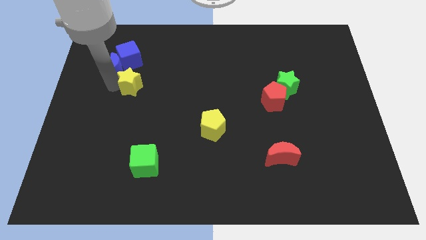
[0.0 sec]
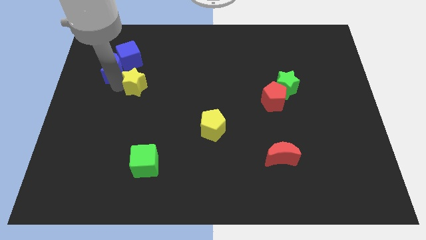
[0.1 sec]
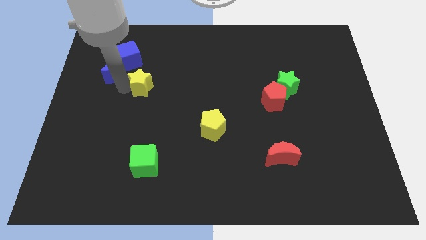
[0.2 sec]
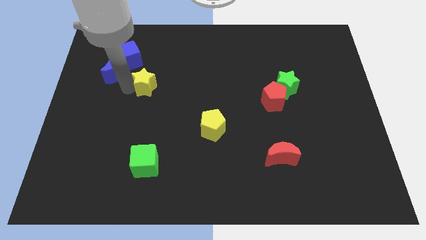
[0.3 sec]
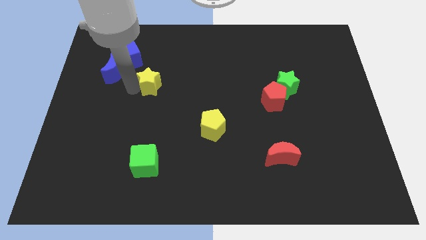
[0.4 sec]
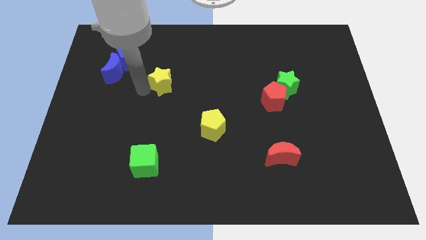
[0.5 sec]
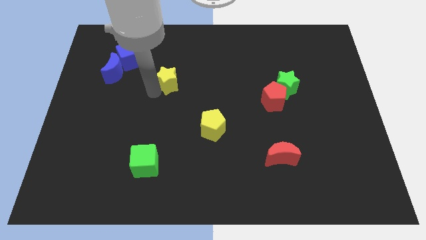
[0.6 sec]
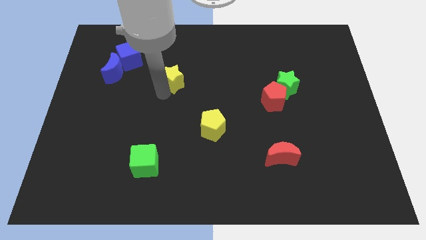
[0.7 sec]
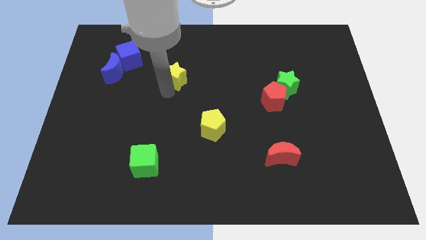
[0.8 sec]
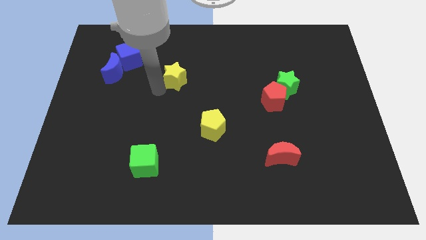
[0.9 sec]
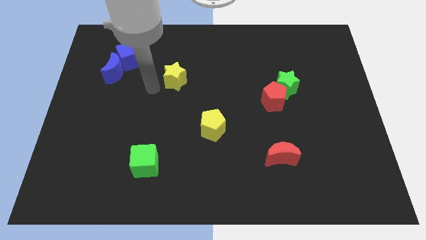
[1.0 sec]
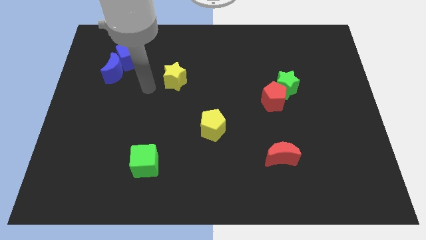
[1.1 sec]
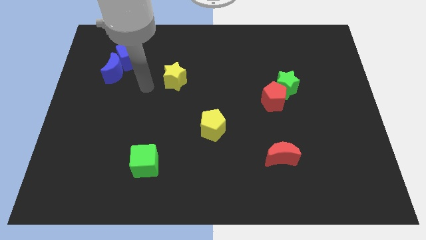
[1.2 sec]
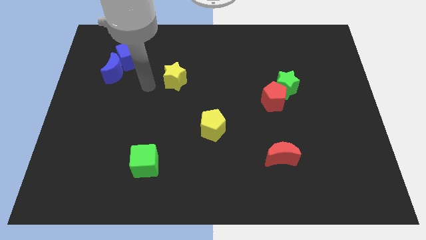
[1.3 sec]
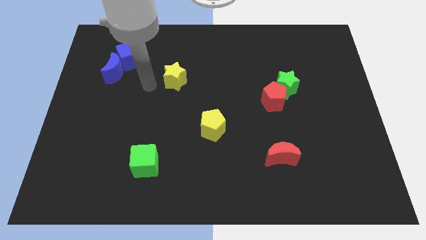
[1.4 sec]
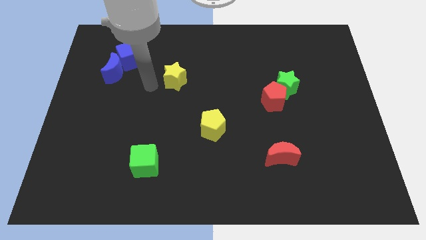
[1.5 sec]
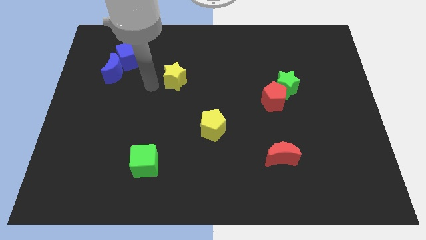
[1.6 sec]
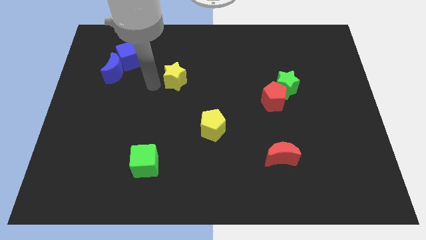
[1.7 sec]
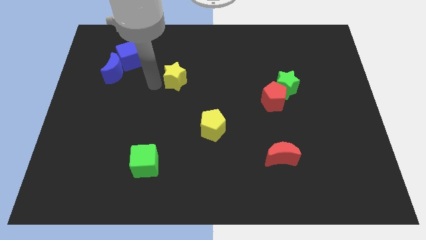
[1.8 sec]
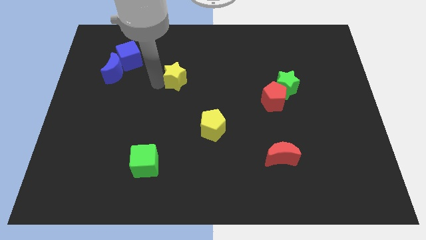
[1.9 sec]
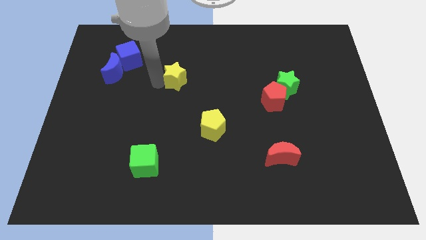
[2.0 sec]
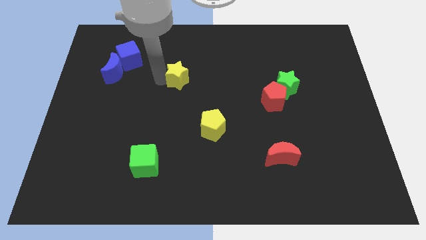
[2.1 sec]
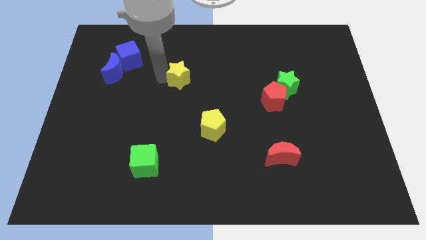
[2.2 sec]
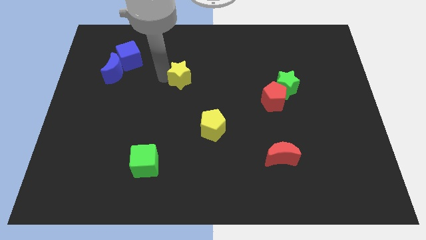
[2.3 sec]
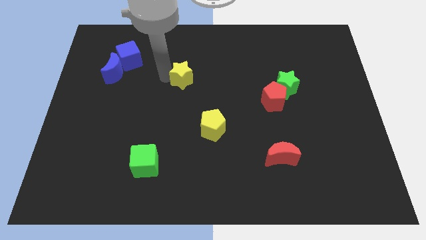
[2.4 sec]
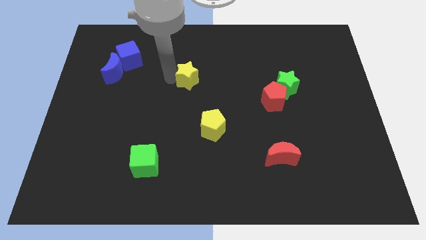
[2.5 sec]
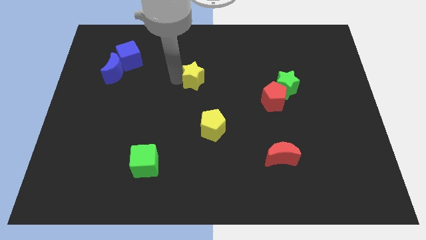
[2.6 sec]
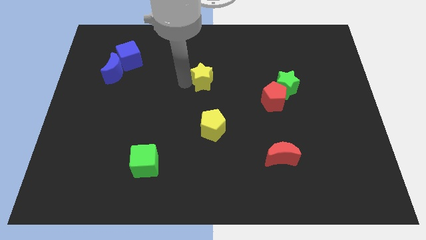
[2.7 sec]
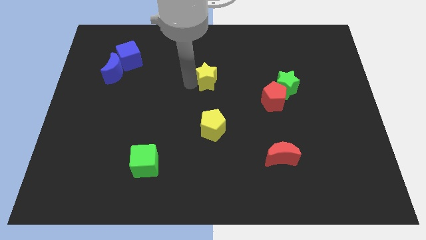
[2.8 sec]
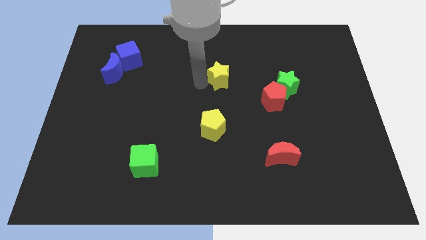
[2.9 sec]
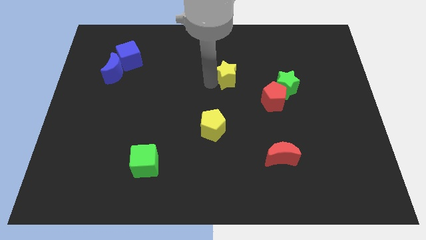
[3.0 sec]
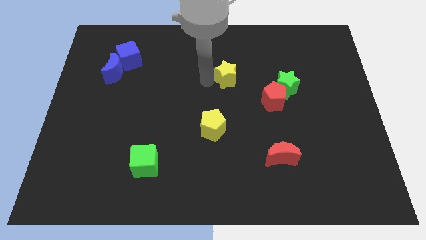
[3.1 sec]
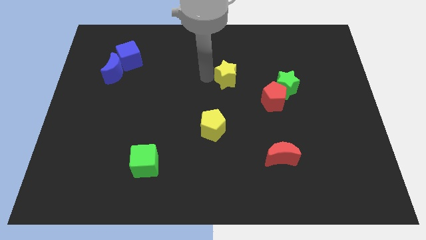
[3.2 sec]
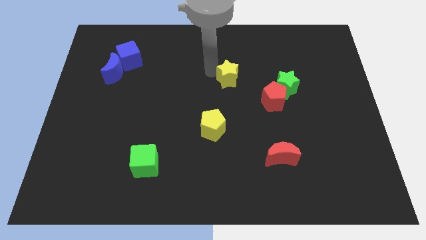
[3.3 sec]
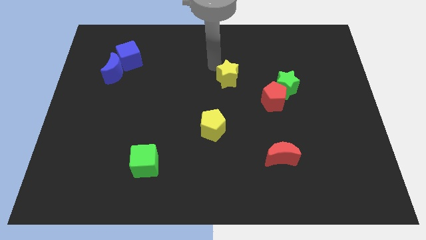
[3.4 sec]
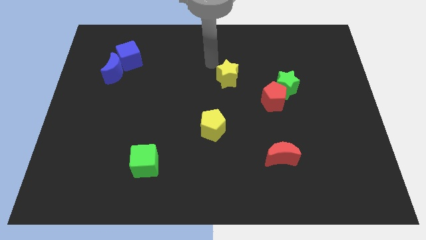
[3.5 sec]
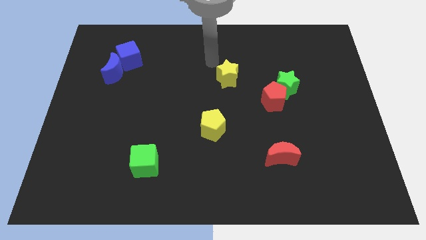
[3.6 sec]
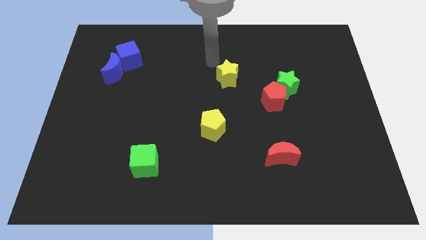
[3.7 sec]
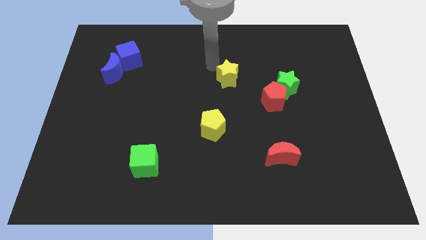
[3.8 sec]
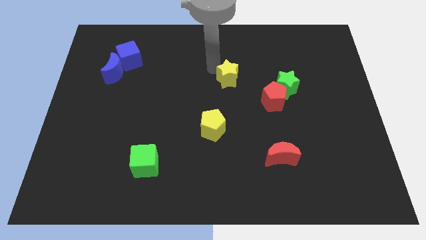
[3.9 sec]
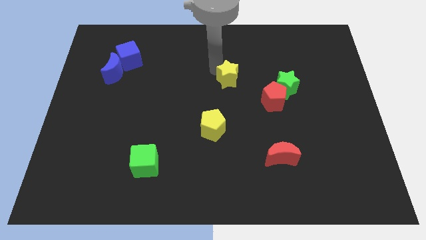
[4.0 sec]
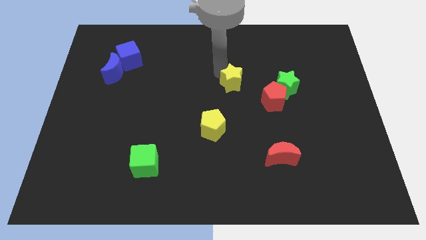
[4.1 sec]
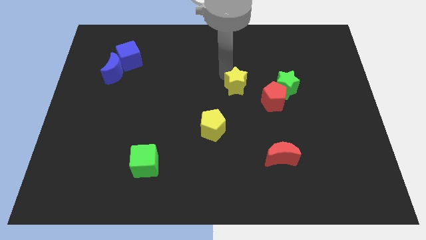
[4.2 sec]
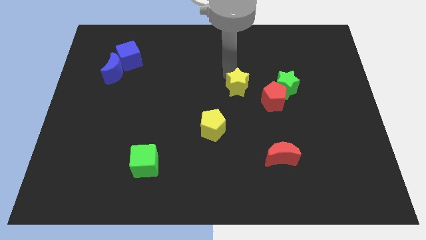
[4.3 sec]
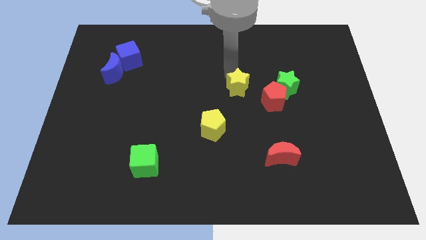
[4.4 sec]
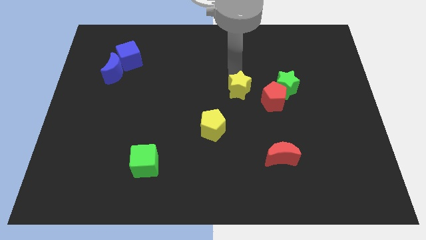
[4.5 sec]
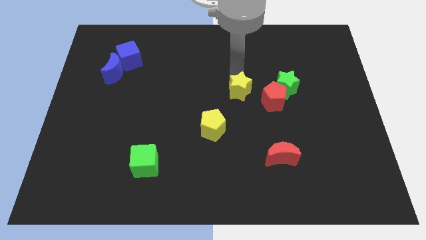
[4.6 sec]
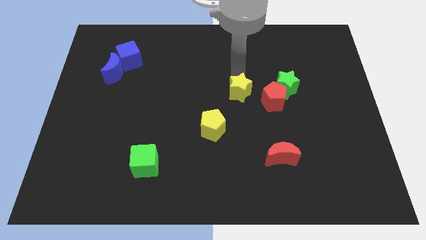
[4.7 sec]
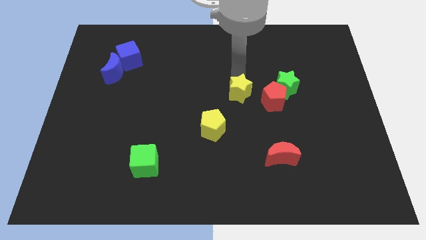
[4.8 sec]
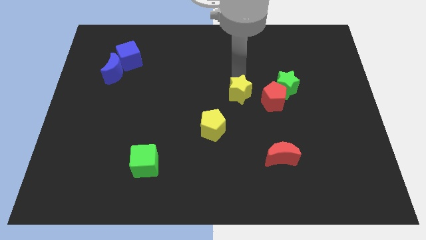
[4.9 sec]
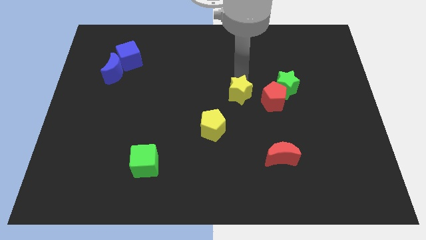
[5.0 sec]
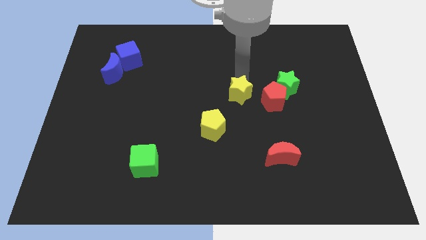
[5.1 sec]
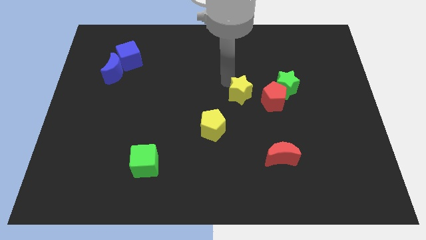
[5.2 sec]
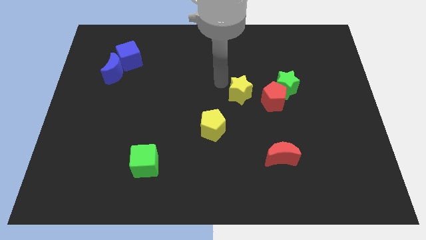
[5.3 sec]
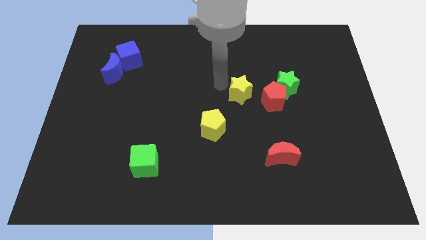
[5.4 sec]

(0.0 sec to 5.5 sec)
move yellow star to the left of the yellow pentagon

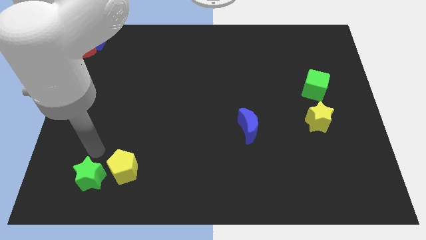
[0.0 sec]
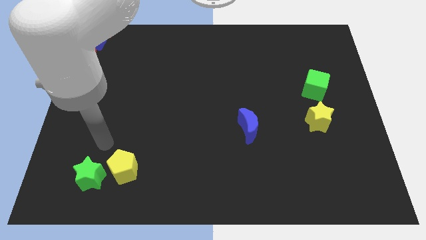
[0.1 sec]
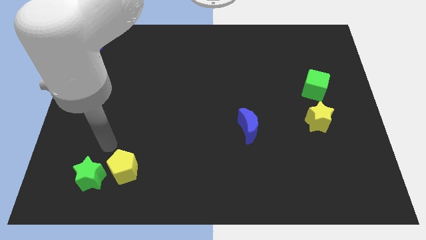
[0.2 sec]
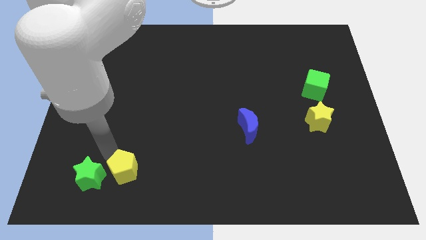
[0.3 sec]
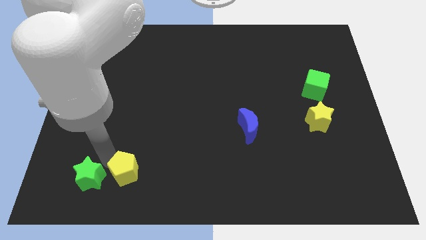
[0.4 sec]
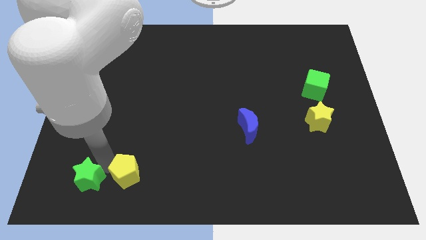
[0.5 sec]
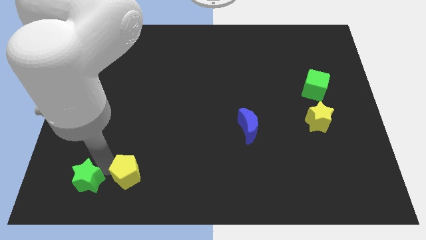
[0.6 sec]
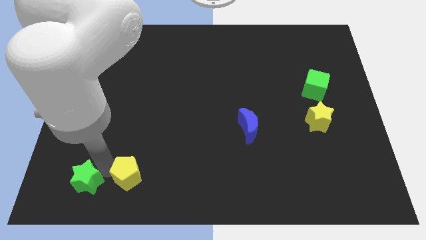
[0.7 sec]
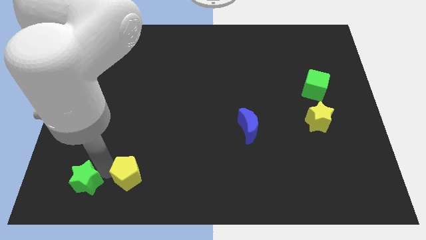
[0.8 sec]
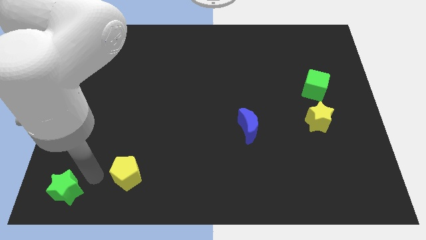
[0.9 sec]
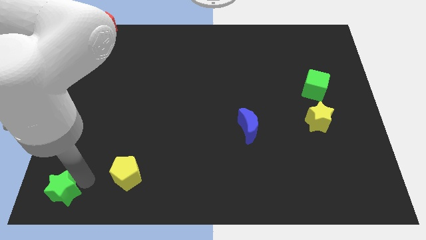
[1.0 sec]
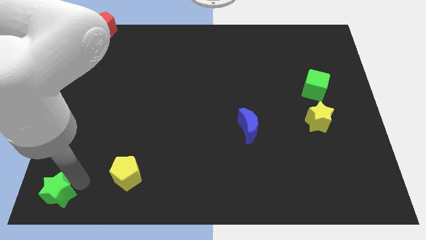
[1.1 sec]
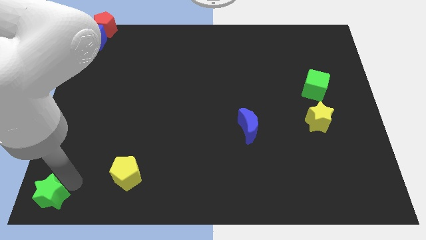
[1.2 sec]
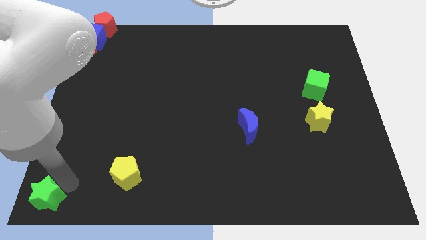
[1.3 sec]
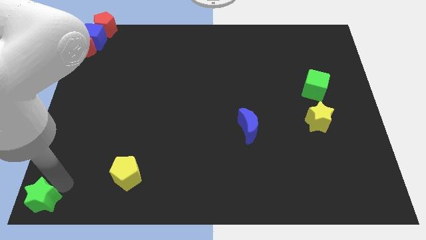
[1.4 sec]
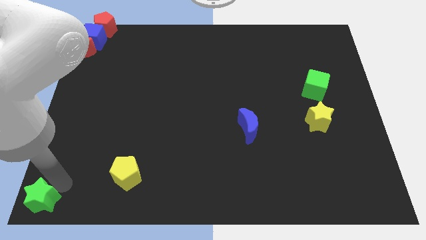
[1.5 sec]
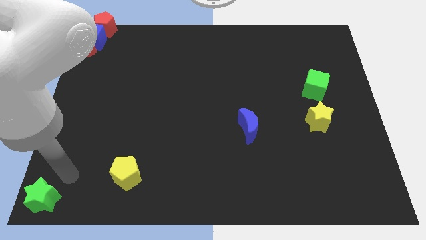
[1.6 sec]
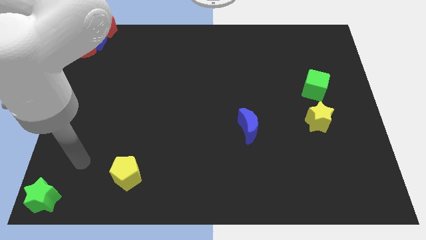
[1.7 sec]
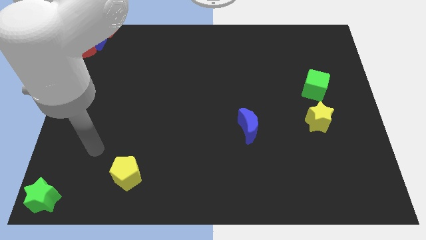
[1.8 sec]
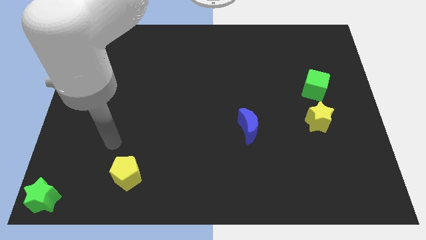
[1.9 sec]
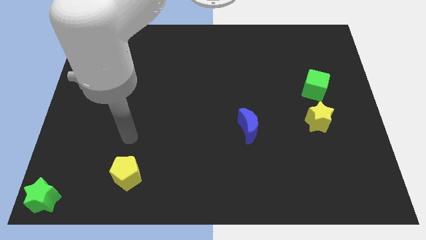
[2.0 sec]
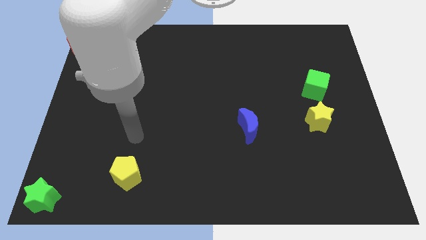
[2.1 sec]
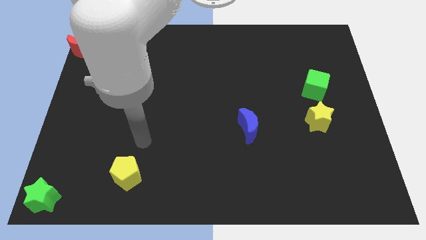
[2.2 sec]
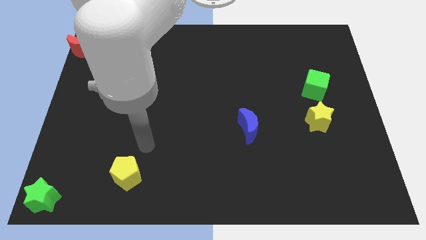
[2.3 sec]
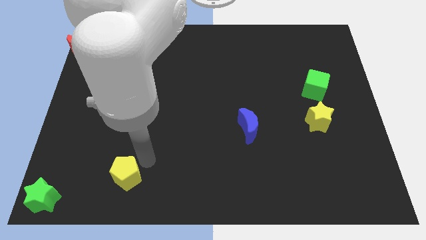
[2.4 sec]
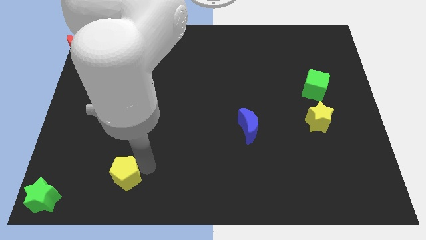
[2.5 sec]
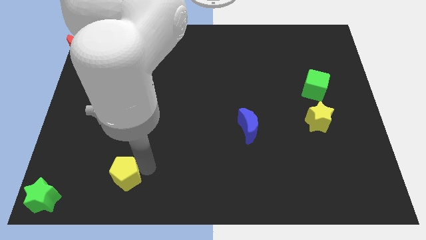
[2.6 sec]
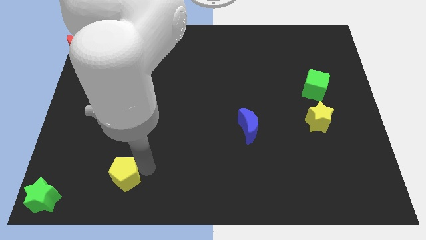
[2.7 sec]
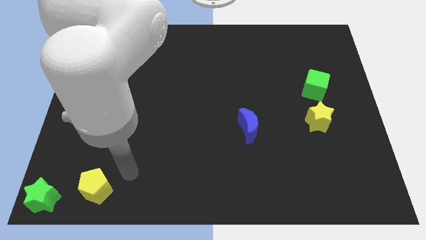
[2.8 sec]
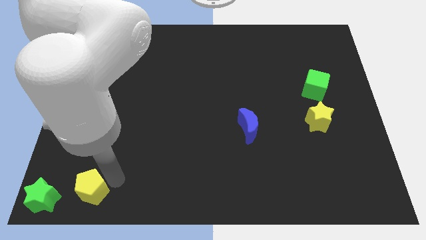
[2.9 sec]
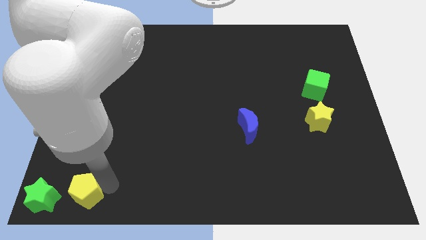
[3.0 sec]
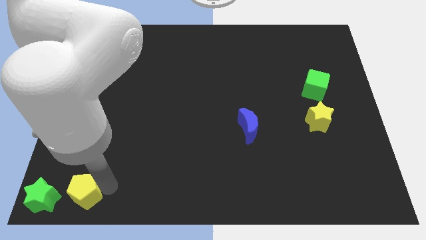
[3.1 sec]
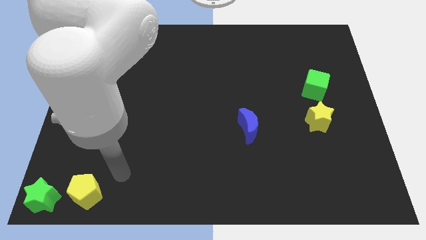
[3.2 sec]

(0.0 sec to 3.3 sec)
place the green star and yellow pentagon at the bottom left side of the board

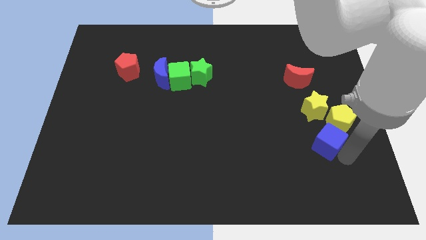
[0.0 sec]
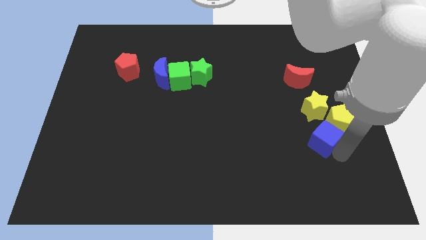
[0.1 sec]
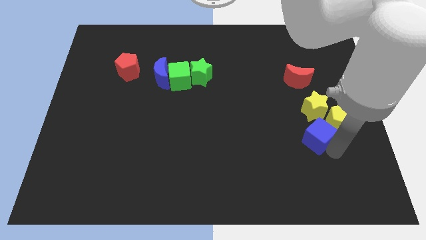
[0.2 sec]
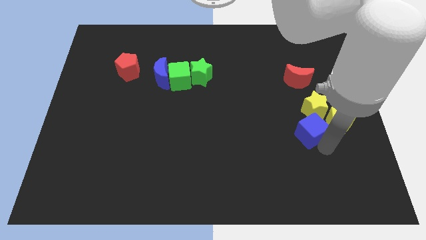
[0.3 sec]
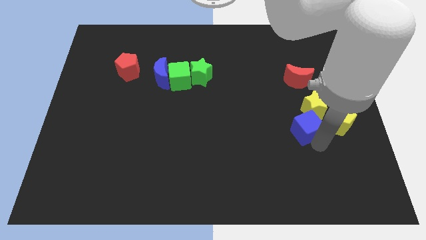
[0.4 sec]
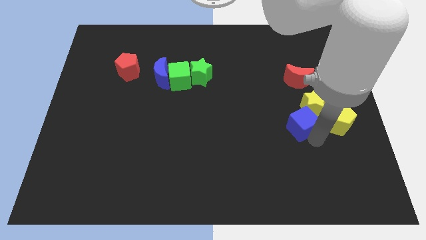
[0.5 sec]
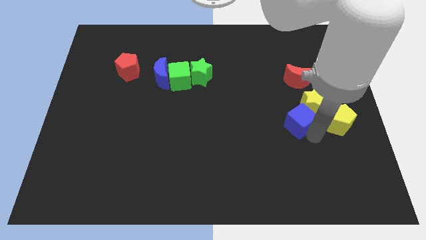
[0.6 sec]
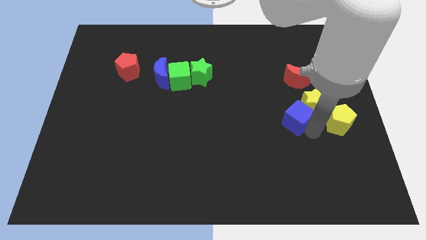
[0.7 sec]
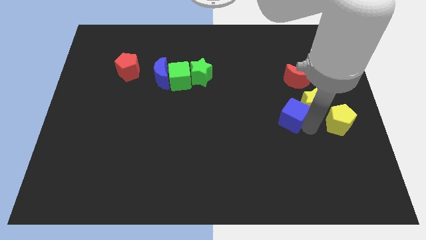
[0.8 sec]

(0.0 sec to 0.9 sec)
push blue cube below the yellow star
